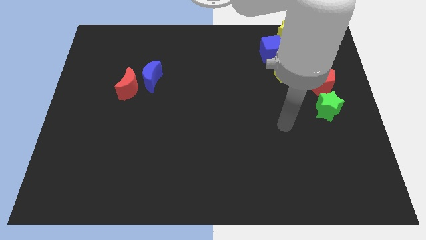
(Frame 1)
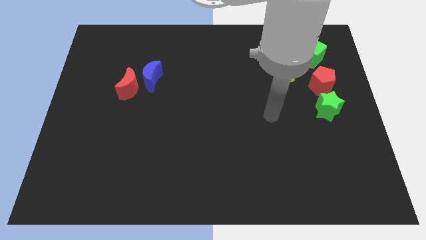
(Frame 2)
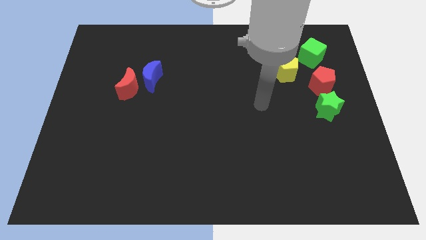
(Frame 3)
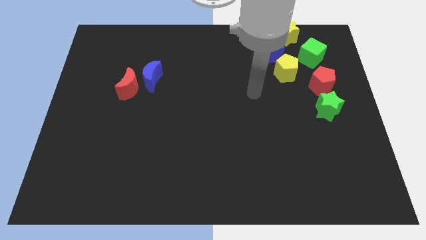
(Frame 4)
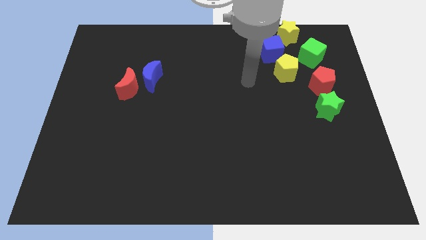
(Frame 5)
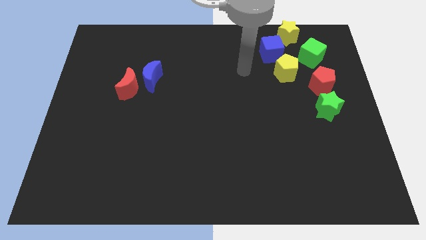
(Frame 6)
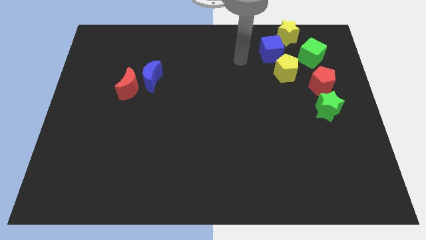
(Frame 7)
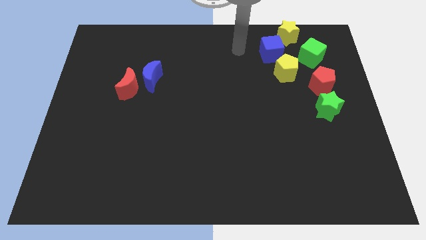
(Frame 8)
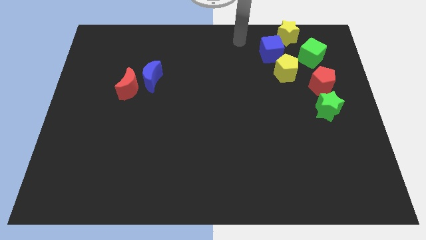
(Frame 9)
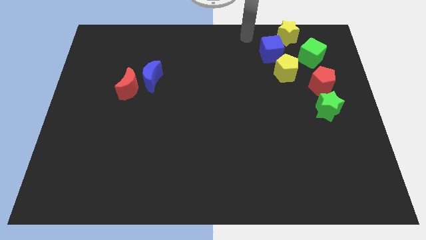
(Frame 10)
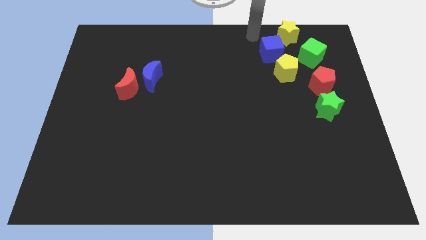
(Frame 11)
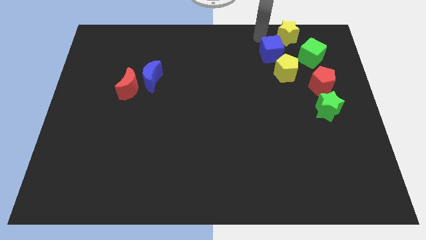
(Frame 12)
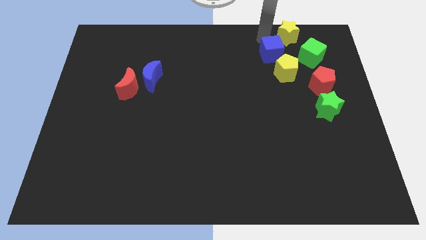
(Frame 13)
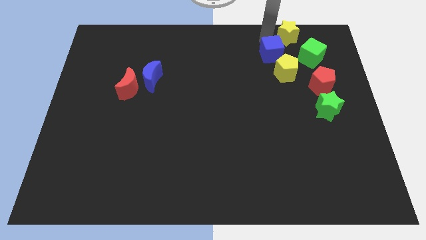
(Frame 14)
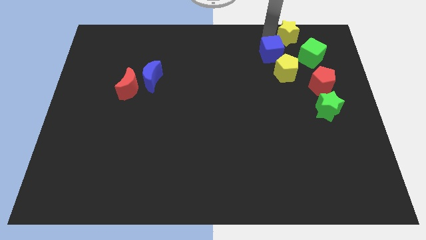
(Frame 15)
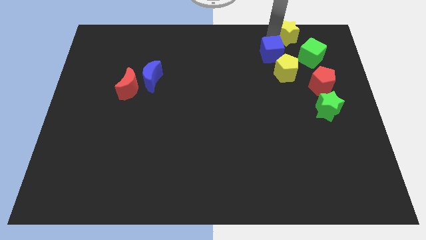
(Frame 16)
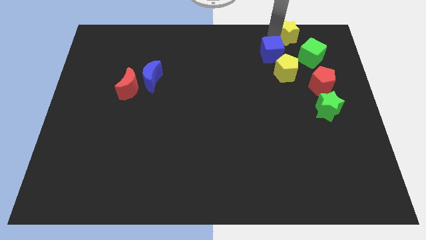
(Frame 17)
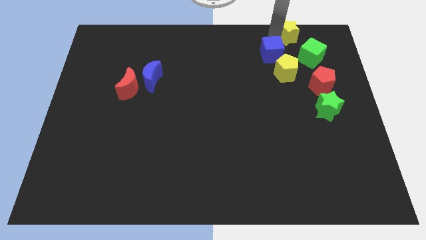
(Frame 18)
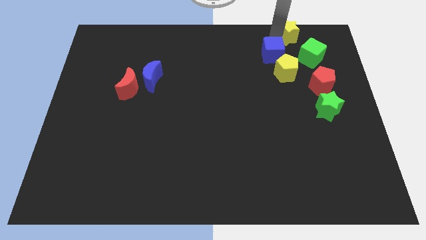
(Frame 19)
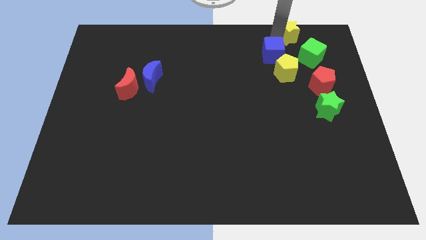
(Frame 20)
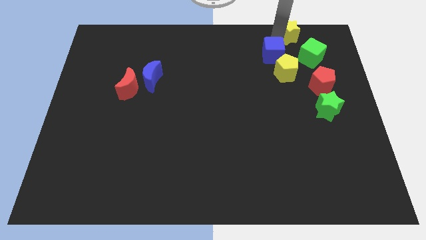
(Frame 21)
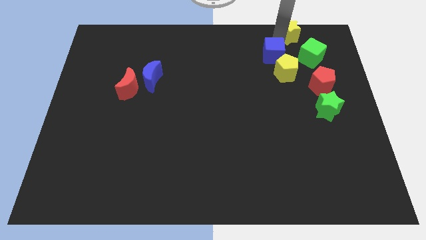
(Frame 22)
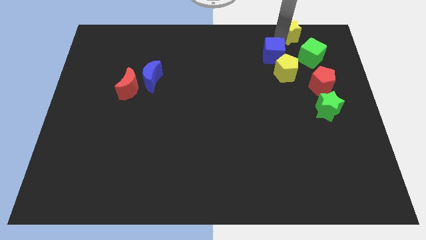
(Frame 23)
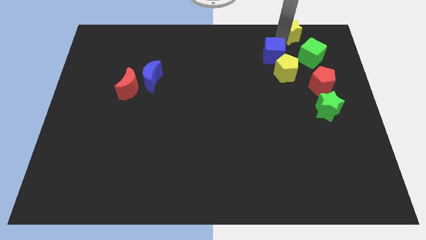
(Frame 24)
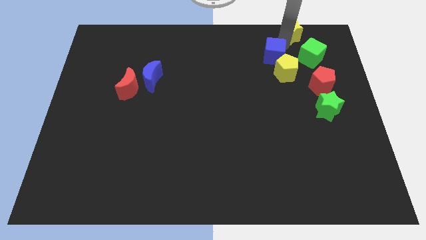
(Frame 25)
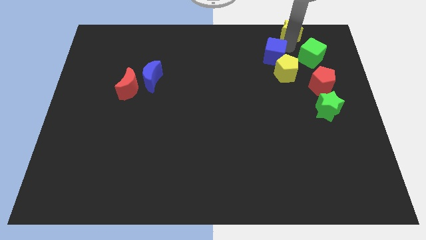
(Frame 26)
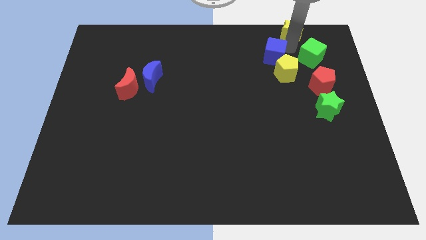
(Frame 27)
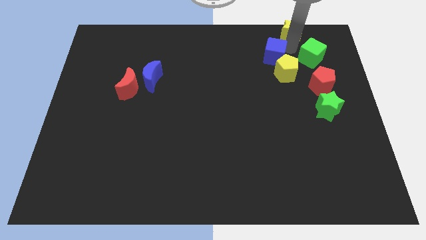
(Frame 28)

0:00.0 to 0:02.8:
move your arm in between the yellow star and yellow pentagon

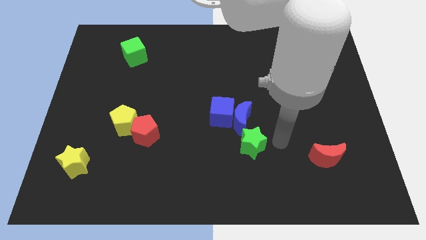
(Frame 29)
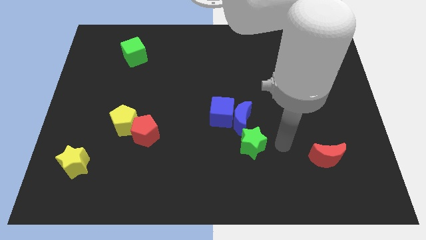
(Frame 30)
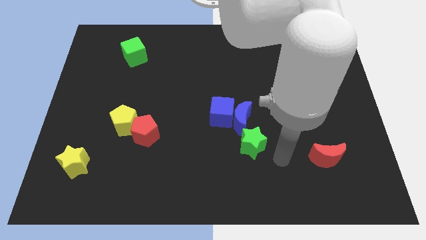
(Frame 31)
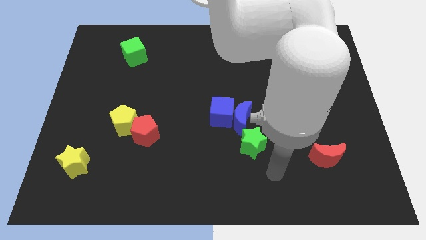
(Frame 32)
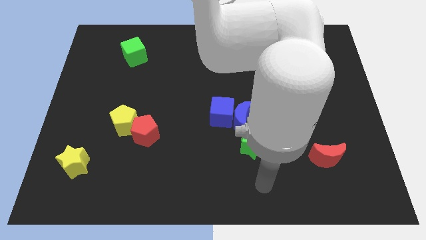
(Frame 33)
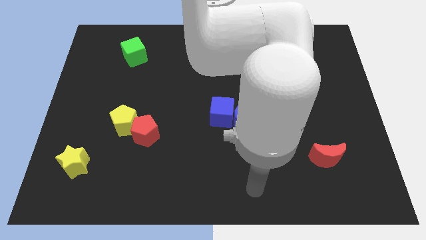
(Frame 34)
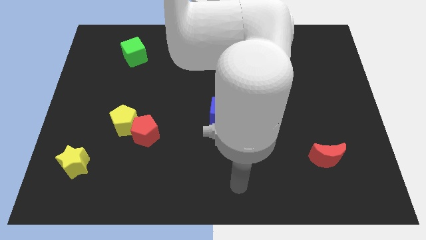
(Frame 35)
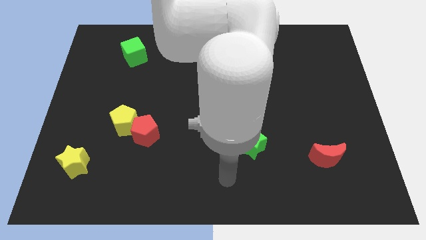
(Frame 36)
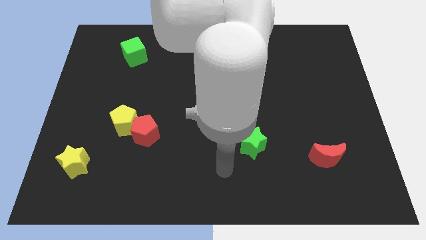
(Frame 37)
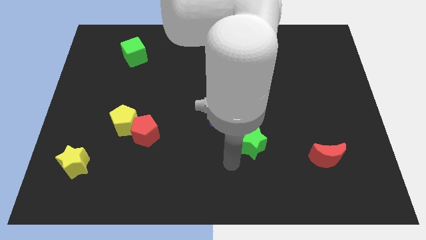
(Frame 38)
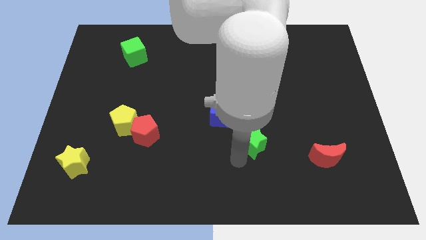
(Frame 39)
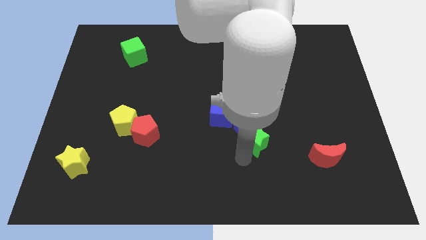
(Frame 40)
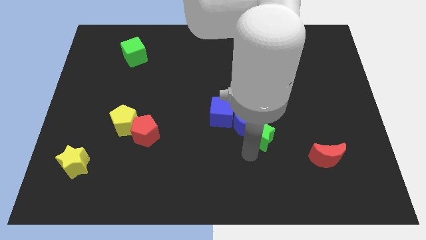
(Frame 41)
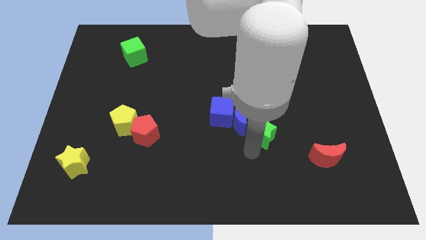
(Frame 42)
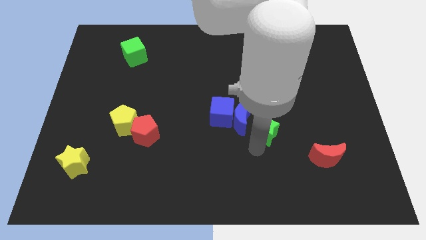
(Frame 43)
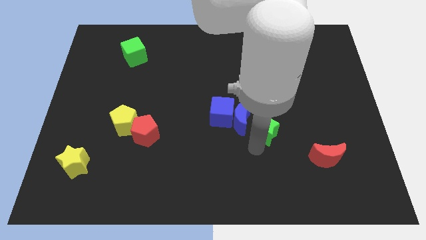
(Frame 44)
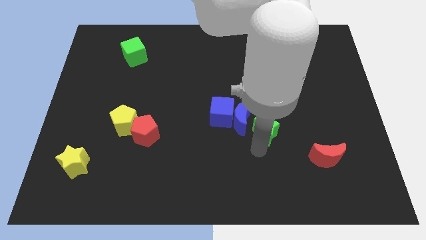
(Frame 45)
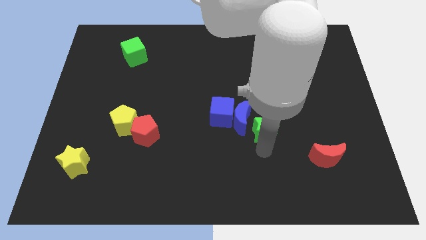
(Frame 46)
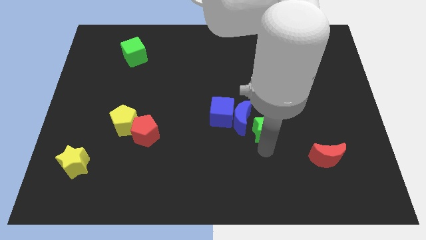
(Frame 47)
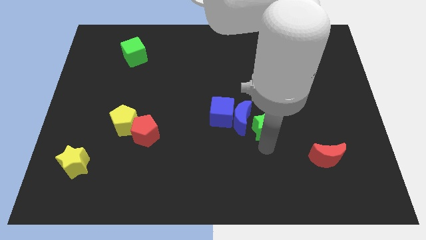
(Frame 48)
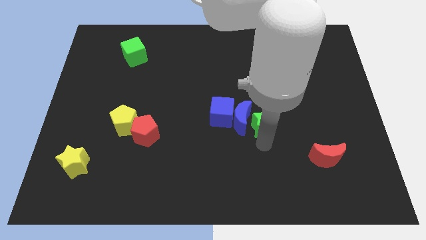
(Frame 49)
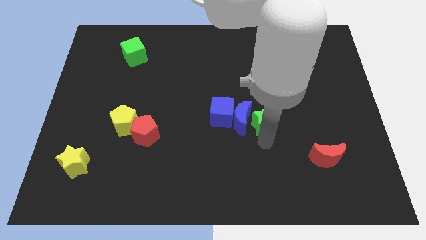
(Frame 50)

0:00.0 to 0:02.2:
move the green star to the right of the blue crescent

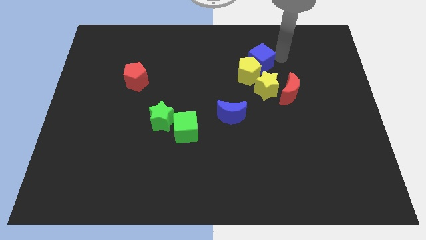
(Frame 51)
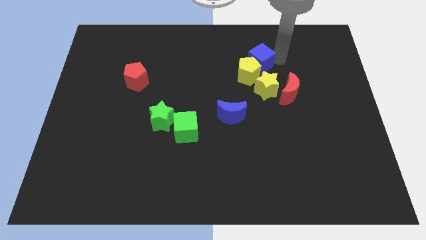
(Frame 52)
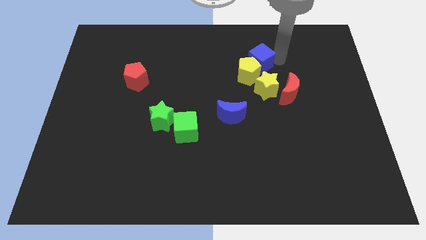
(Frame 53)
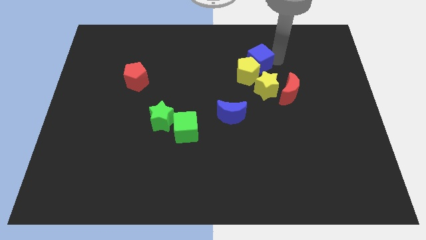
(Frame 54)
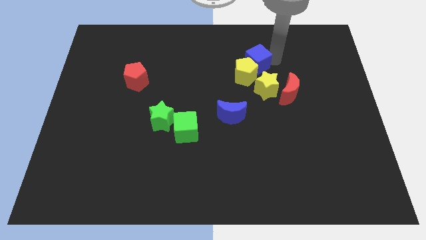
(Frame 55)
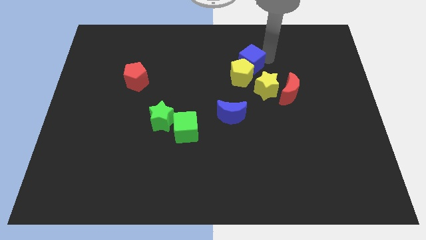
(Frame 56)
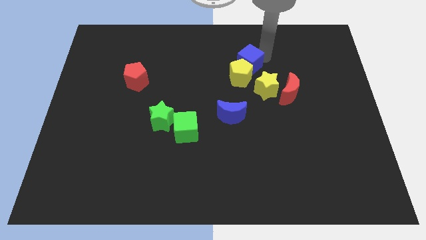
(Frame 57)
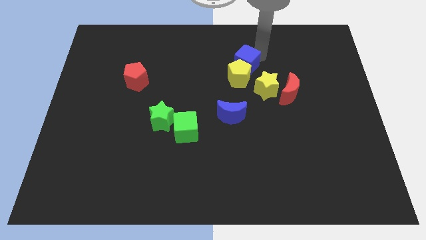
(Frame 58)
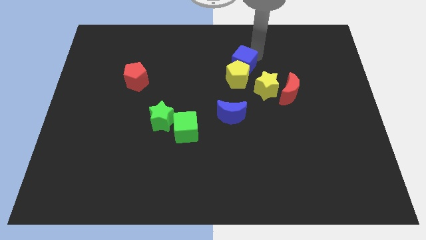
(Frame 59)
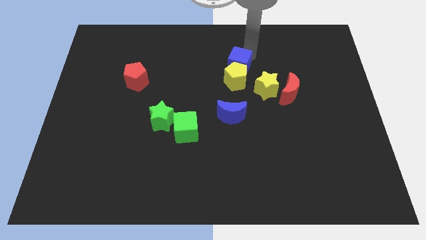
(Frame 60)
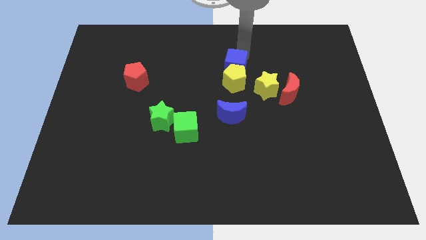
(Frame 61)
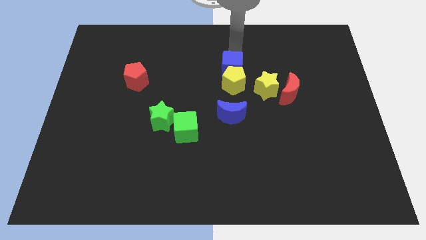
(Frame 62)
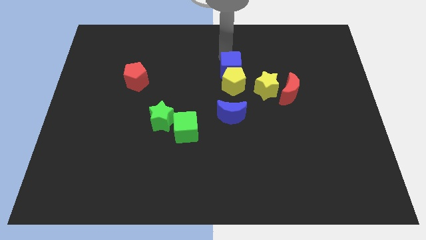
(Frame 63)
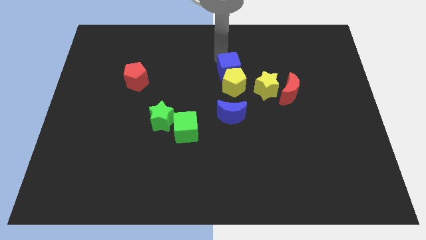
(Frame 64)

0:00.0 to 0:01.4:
push the blue cube downwards slightly

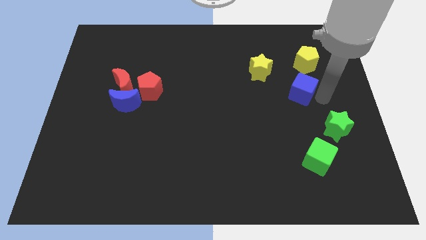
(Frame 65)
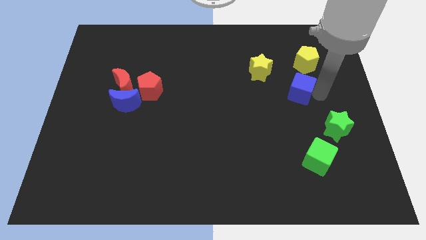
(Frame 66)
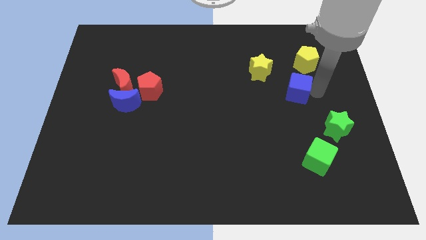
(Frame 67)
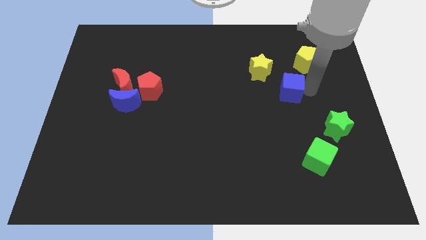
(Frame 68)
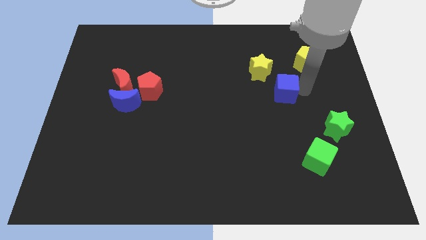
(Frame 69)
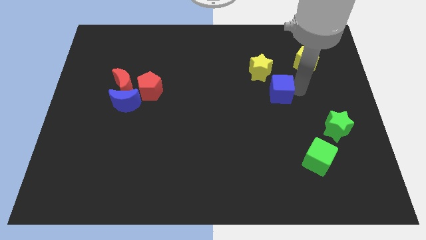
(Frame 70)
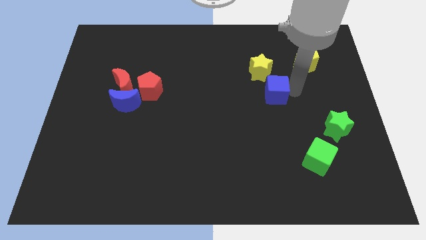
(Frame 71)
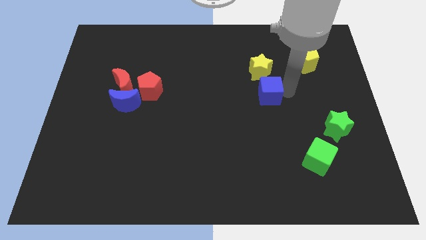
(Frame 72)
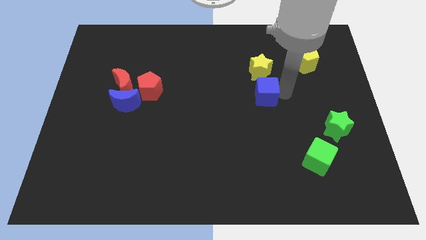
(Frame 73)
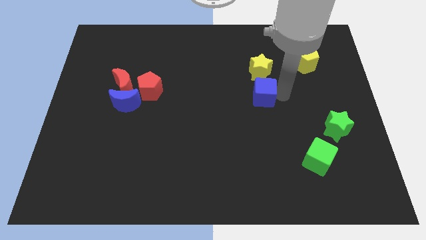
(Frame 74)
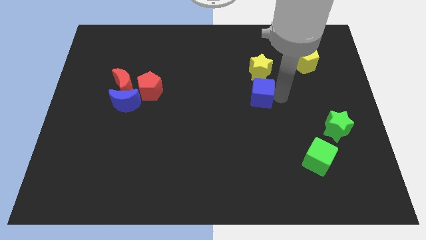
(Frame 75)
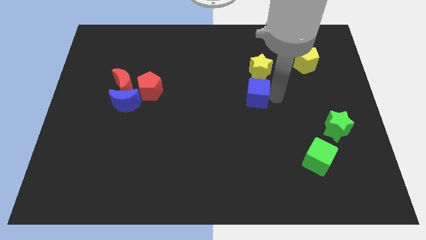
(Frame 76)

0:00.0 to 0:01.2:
place the blue cube vertically below the yellow star

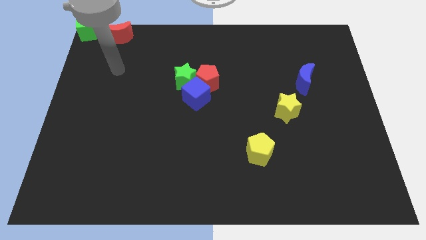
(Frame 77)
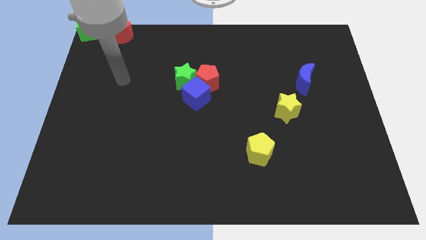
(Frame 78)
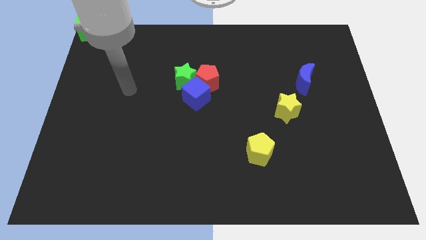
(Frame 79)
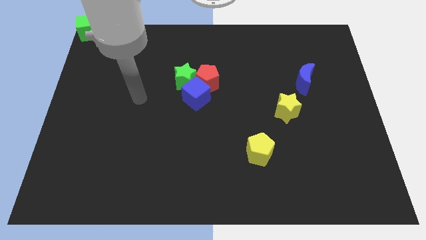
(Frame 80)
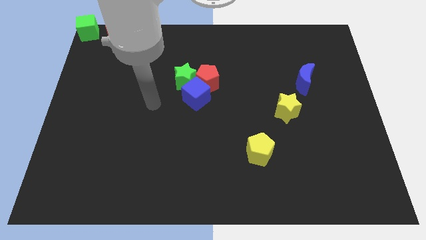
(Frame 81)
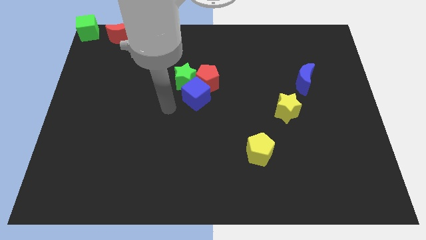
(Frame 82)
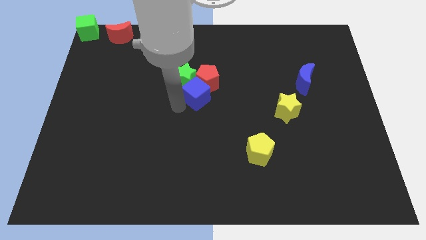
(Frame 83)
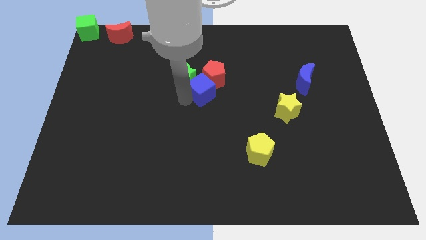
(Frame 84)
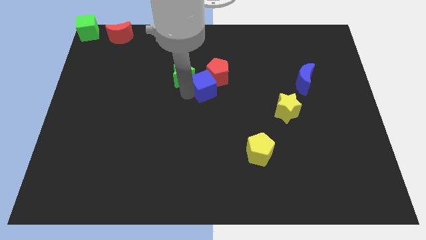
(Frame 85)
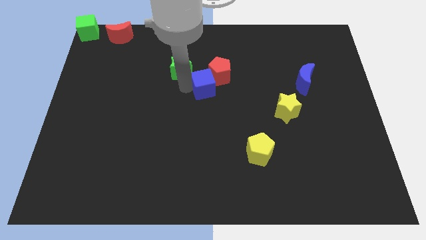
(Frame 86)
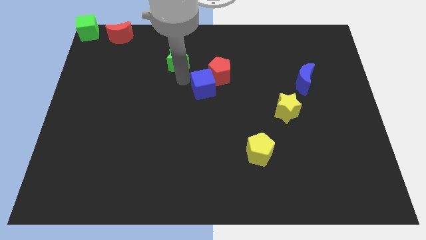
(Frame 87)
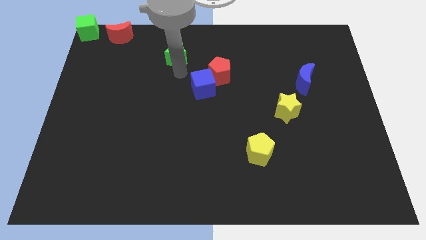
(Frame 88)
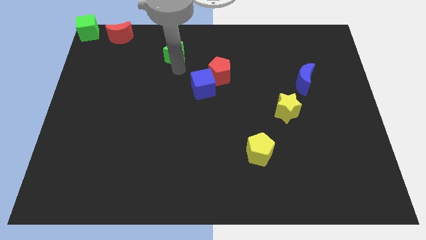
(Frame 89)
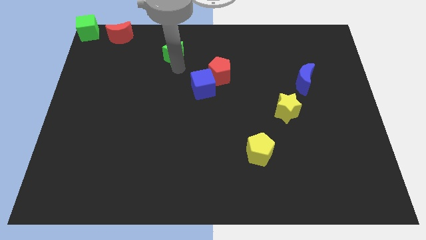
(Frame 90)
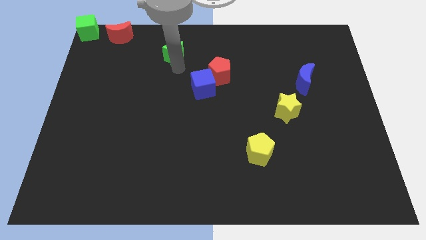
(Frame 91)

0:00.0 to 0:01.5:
separate the green star from the group of blocks
